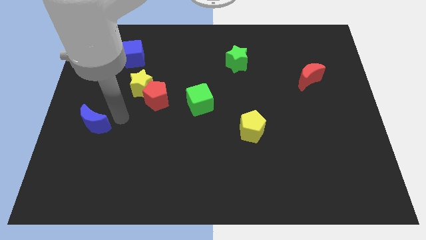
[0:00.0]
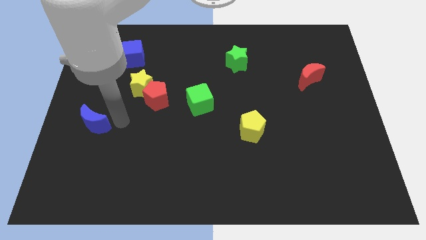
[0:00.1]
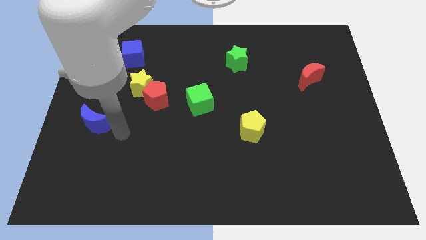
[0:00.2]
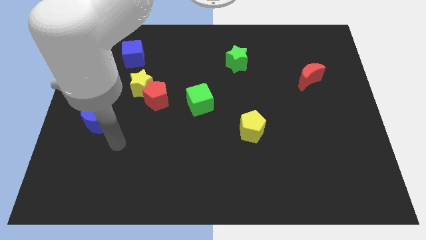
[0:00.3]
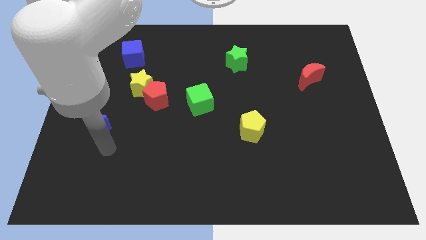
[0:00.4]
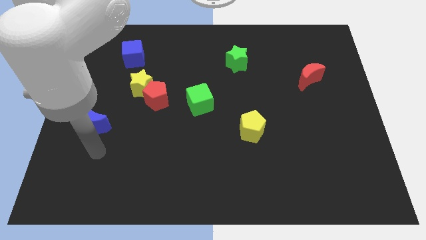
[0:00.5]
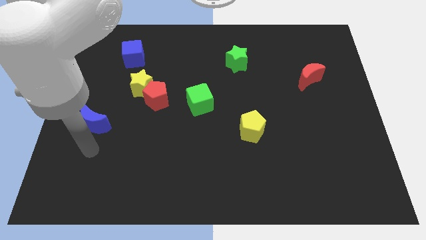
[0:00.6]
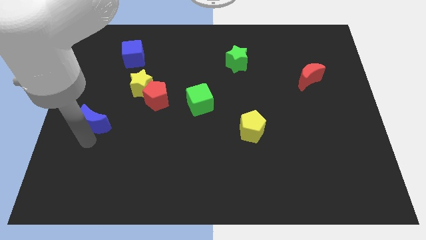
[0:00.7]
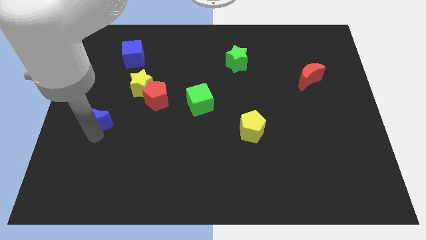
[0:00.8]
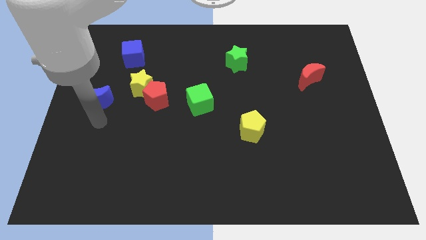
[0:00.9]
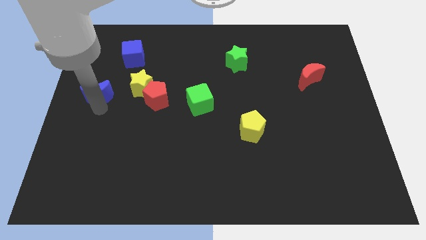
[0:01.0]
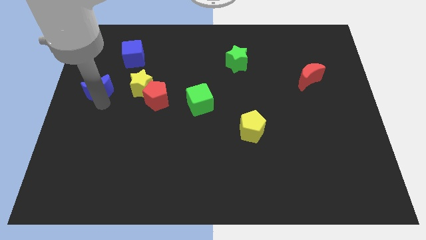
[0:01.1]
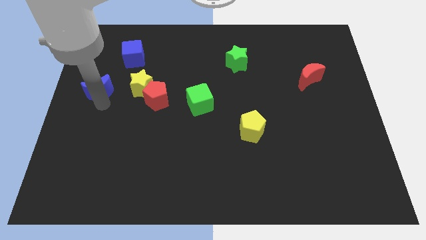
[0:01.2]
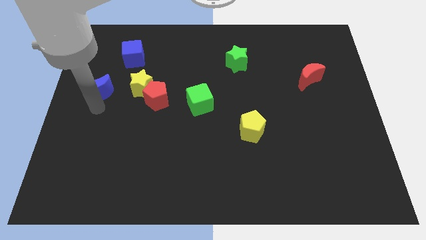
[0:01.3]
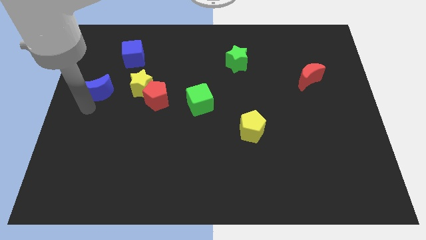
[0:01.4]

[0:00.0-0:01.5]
move the blue moon upwards of the board

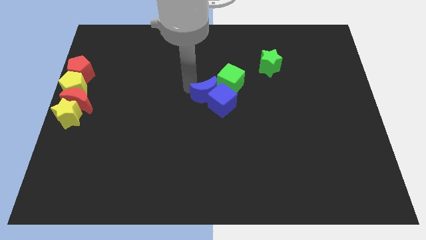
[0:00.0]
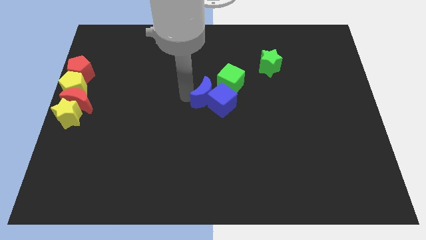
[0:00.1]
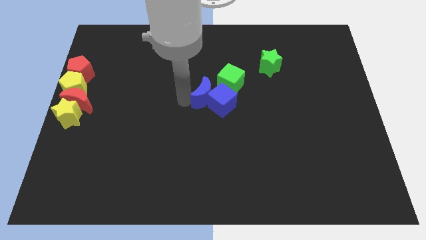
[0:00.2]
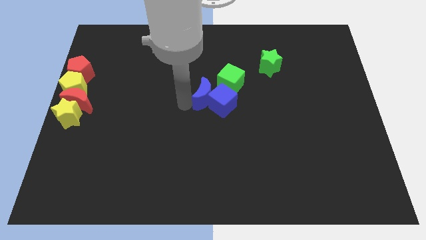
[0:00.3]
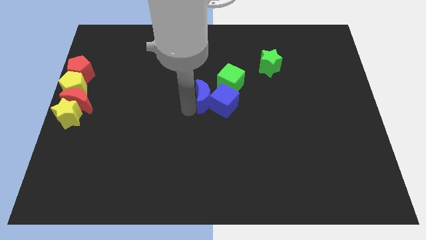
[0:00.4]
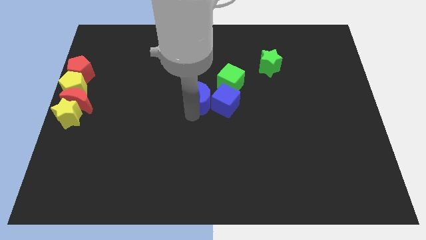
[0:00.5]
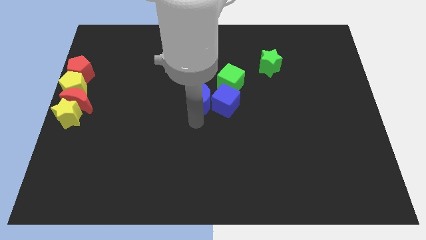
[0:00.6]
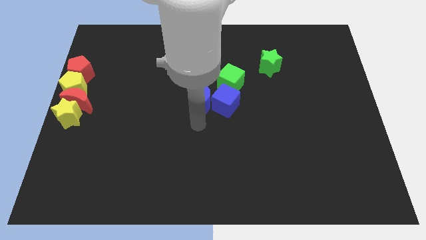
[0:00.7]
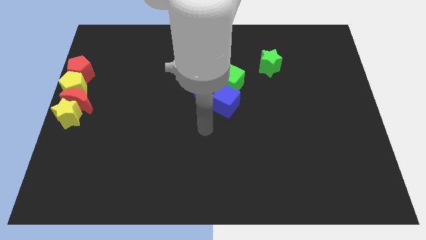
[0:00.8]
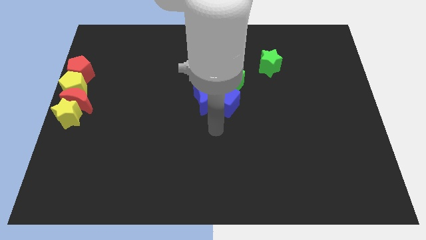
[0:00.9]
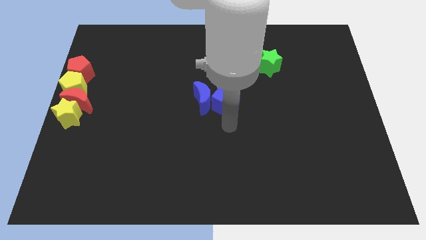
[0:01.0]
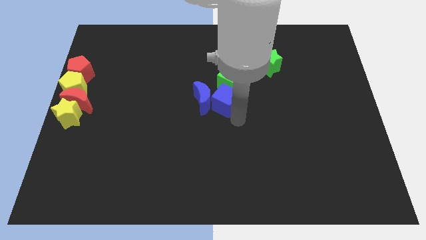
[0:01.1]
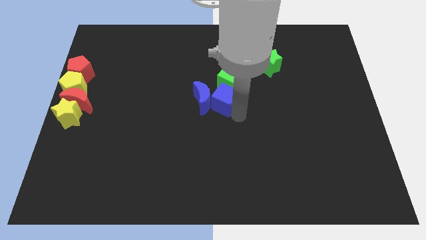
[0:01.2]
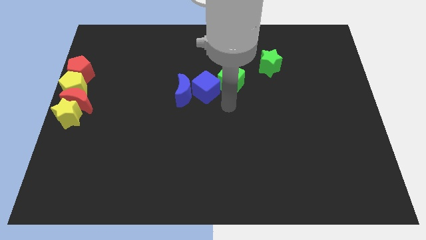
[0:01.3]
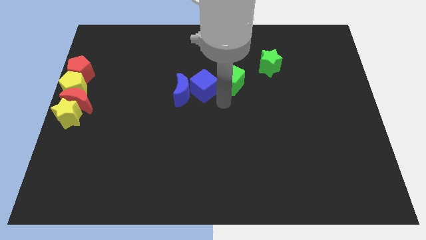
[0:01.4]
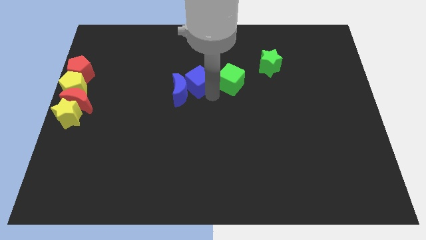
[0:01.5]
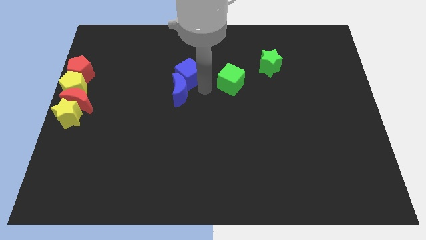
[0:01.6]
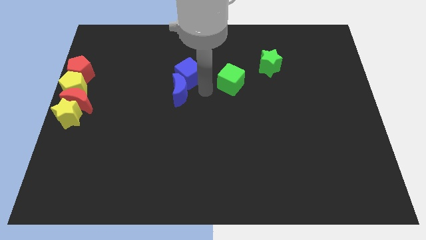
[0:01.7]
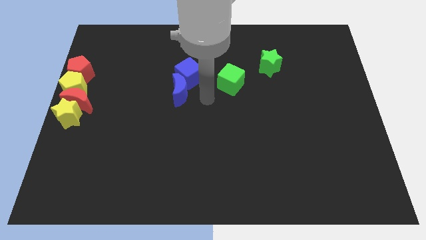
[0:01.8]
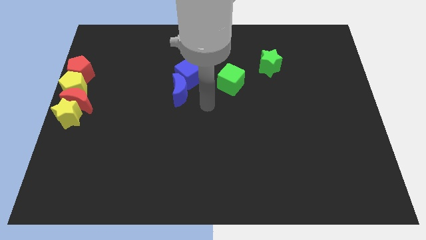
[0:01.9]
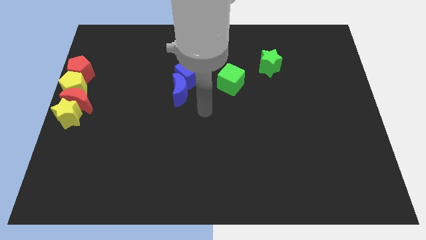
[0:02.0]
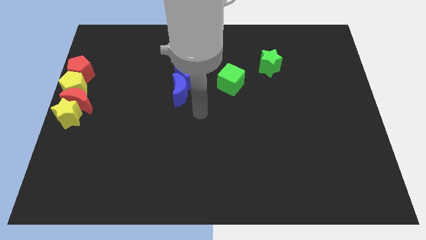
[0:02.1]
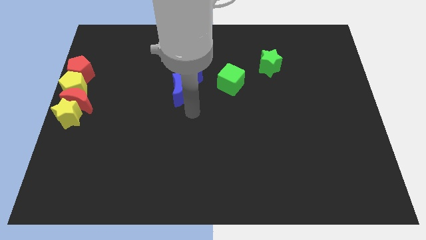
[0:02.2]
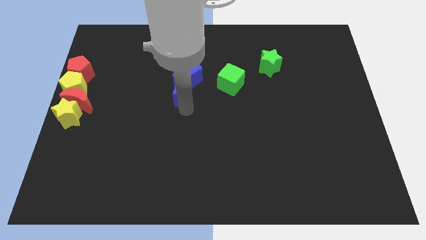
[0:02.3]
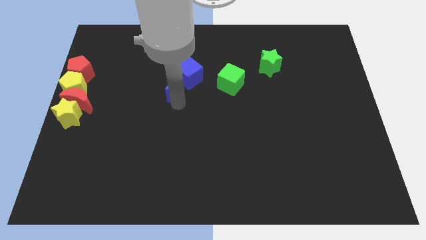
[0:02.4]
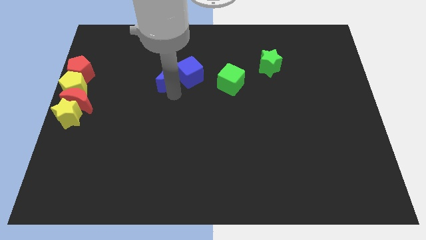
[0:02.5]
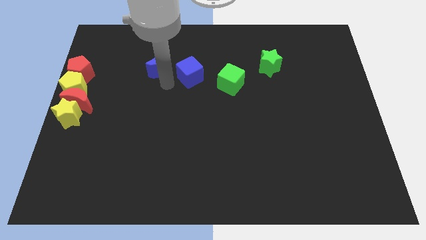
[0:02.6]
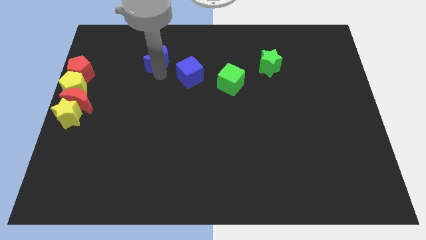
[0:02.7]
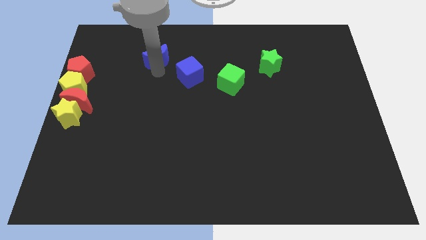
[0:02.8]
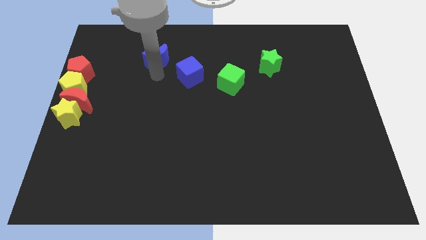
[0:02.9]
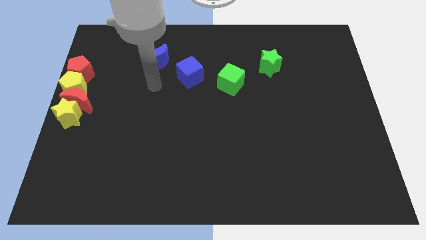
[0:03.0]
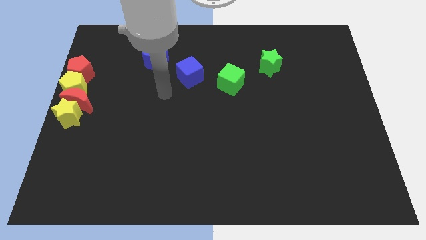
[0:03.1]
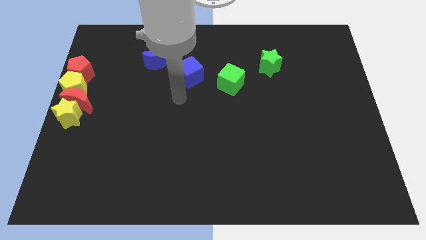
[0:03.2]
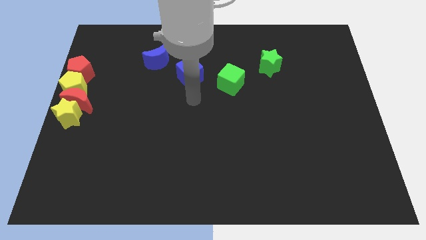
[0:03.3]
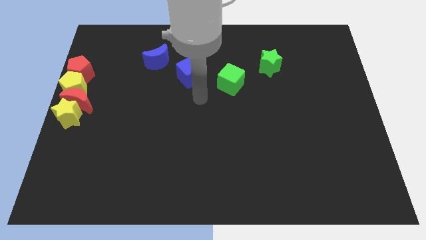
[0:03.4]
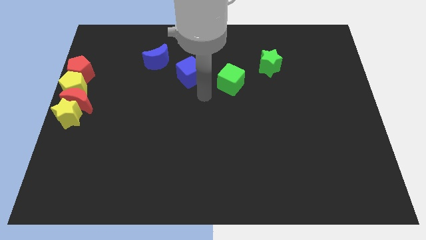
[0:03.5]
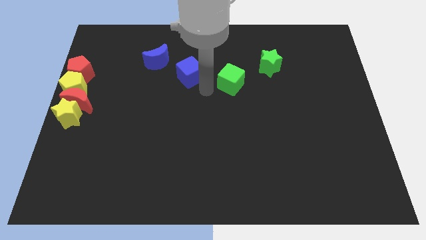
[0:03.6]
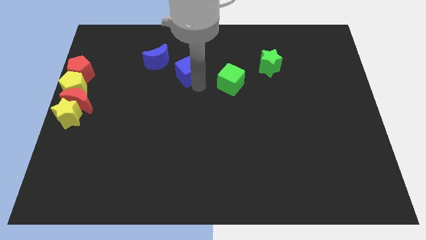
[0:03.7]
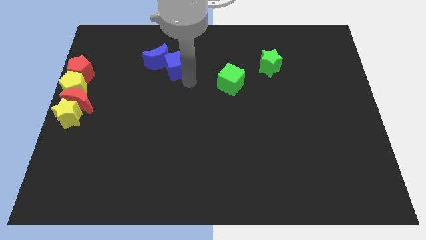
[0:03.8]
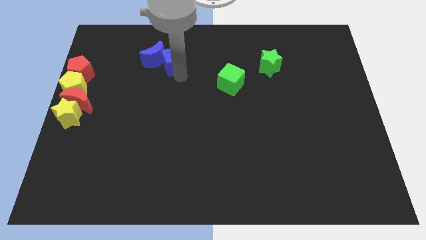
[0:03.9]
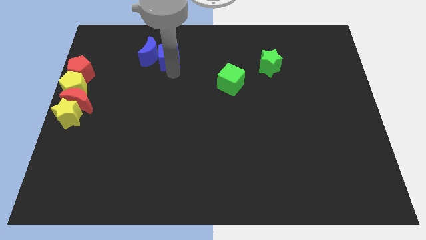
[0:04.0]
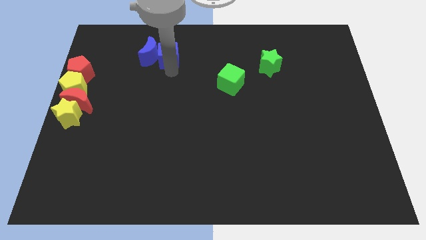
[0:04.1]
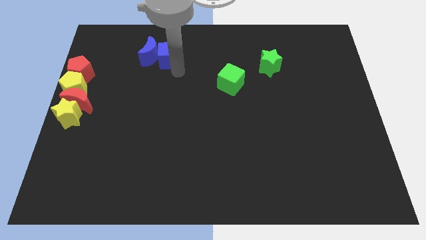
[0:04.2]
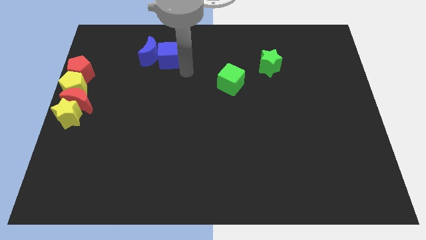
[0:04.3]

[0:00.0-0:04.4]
move the blue blocks towards the top left of the board

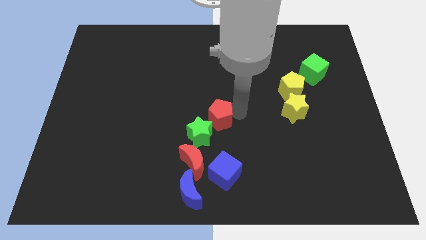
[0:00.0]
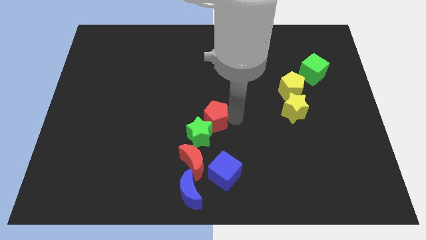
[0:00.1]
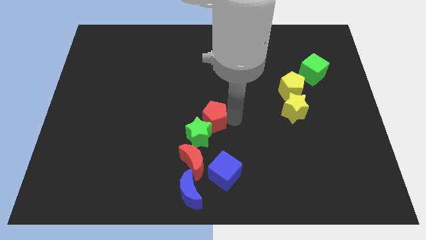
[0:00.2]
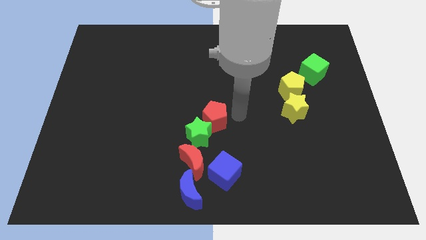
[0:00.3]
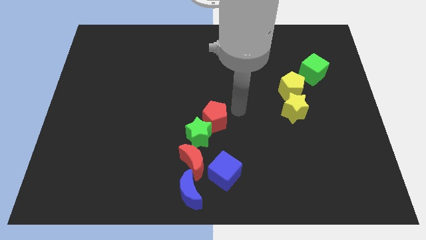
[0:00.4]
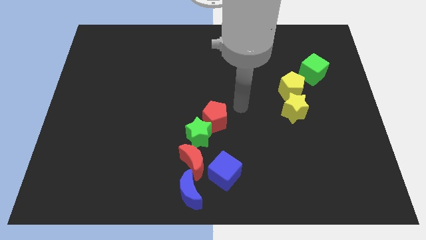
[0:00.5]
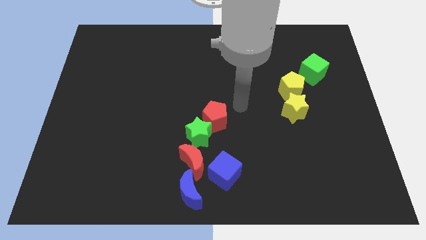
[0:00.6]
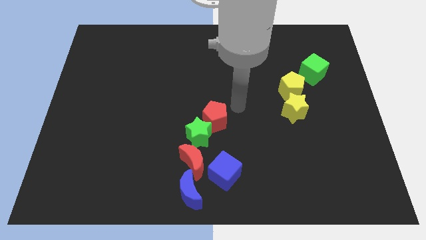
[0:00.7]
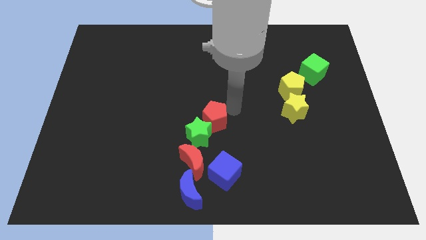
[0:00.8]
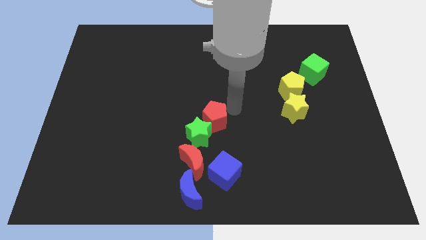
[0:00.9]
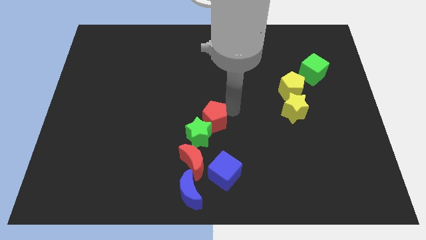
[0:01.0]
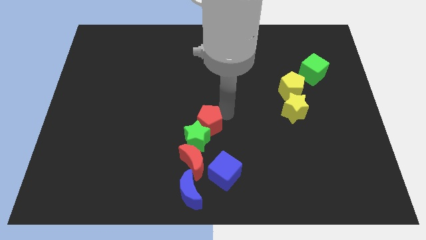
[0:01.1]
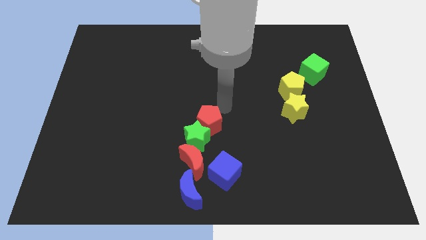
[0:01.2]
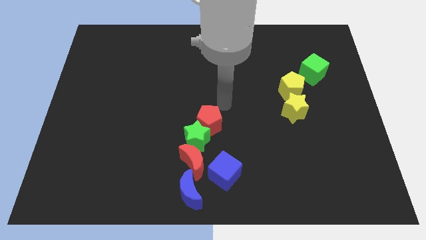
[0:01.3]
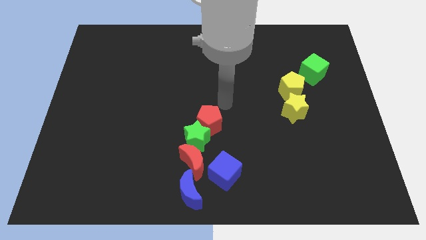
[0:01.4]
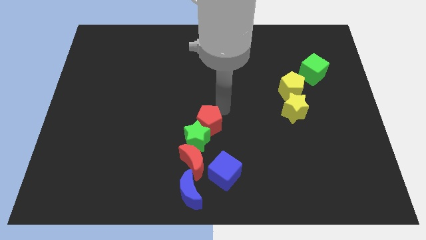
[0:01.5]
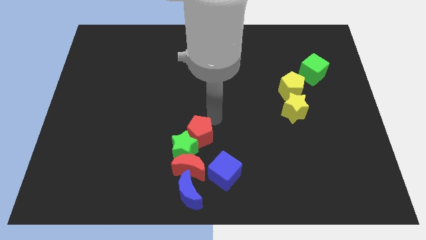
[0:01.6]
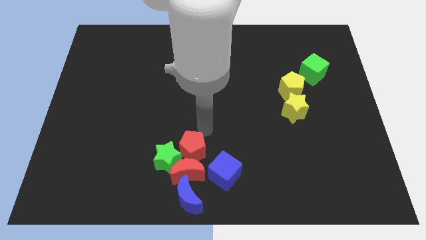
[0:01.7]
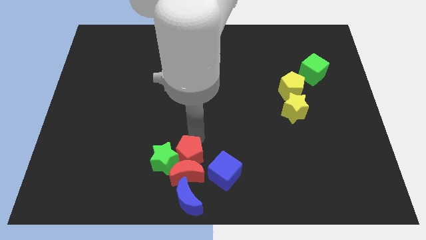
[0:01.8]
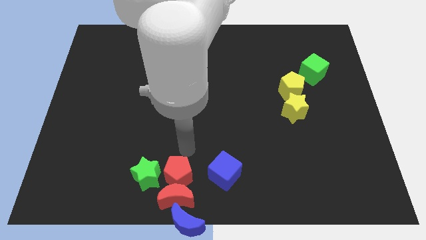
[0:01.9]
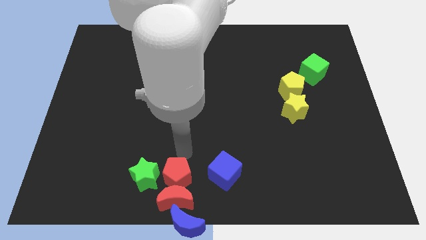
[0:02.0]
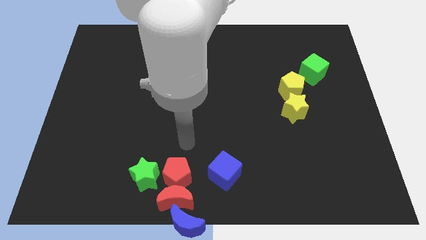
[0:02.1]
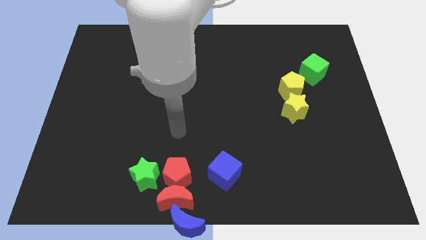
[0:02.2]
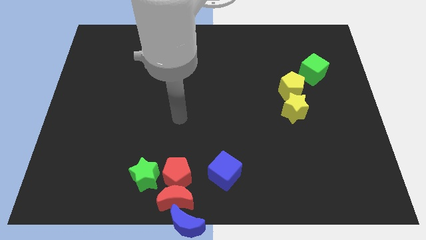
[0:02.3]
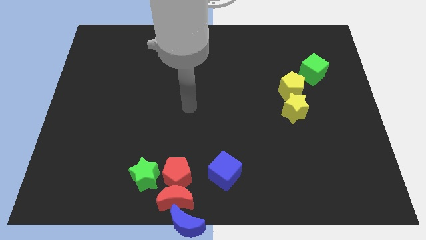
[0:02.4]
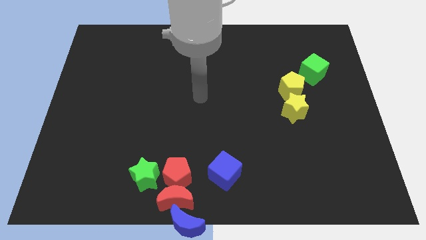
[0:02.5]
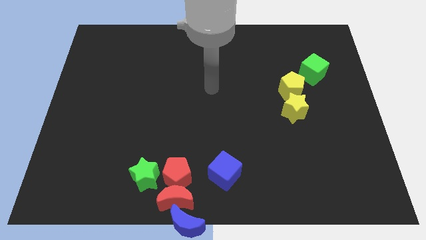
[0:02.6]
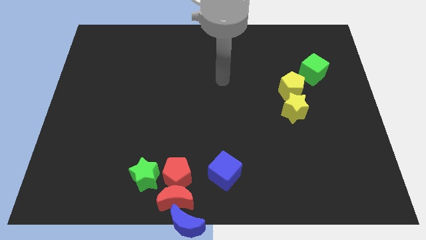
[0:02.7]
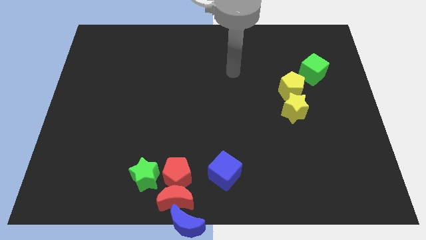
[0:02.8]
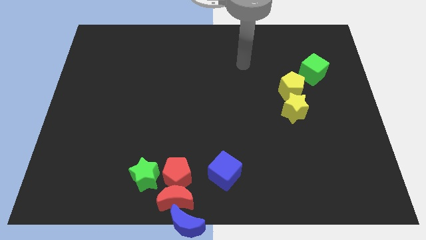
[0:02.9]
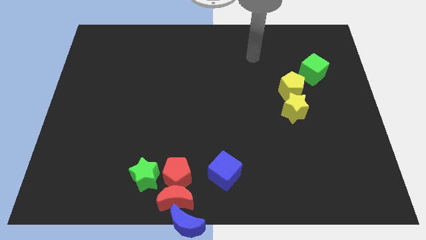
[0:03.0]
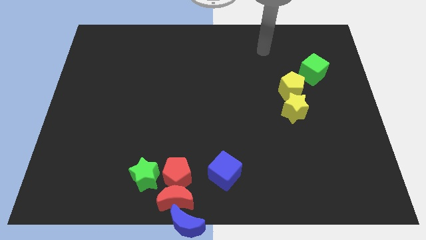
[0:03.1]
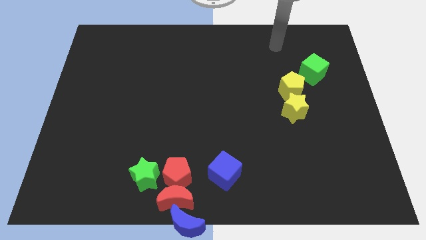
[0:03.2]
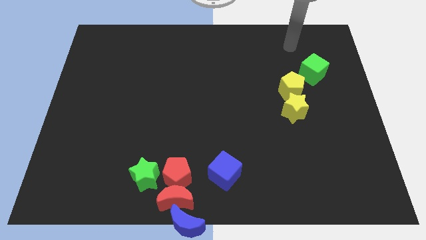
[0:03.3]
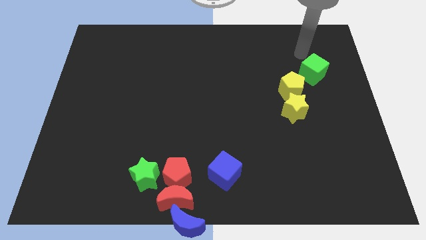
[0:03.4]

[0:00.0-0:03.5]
push the red crescent and blue crescent towards the bottom center with the red pentagon
